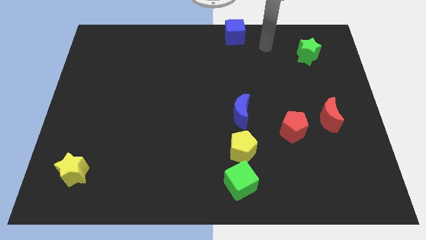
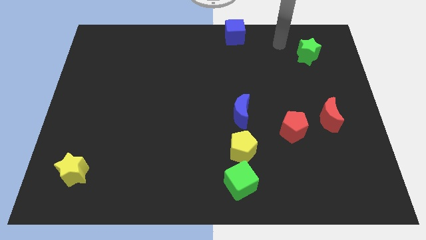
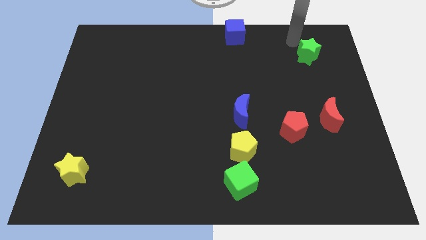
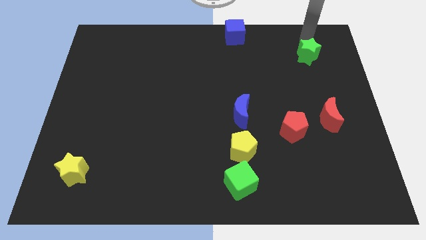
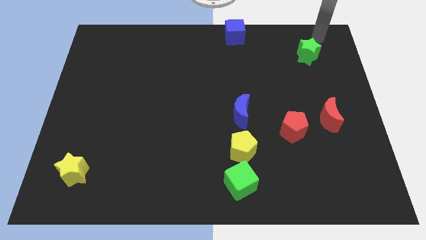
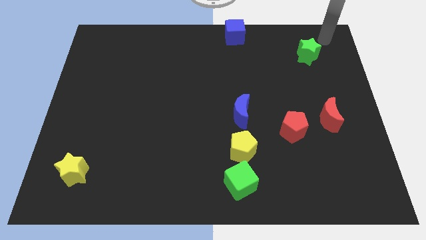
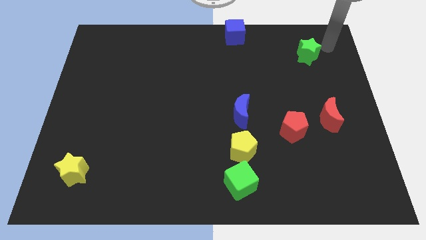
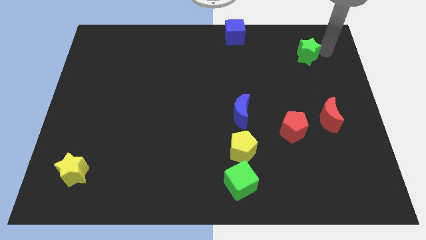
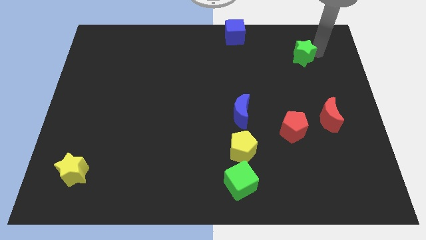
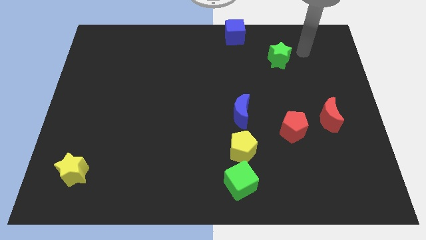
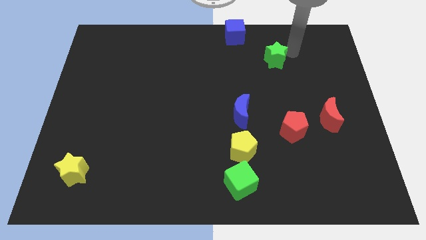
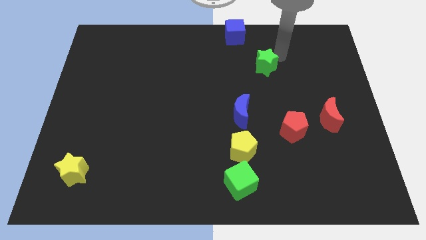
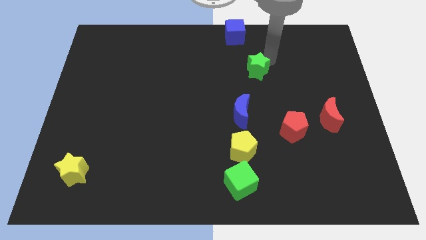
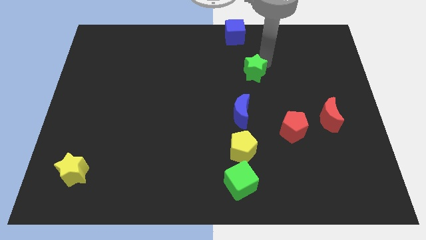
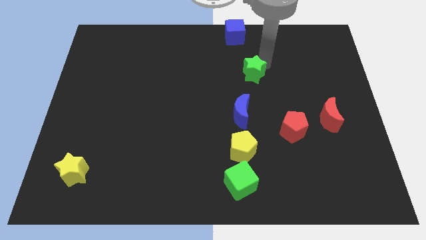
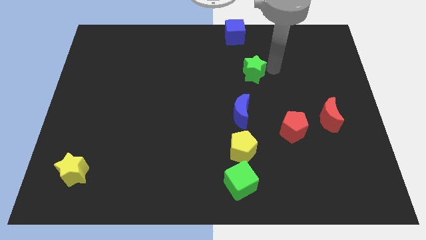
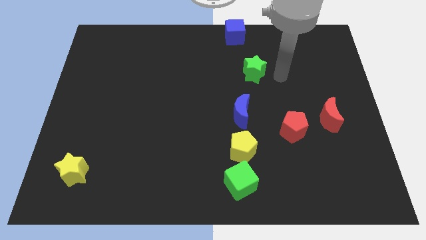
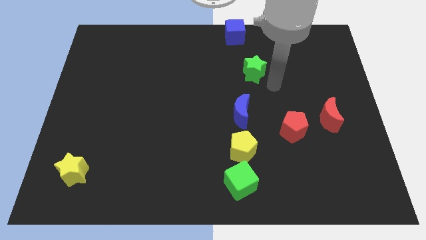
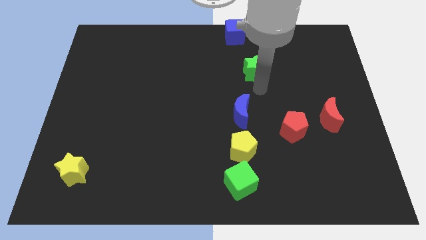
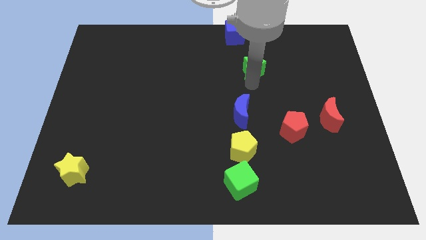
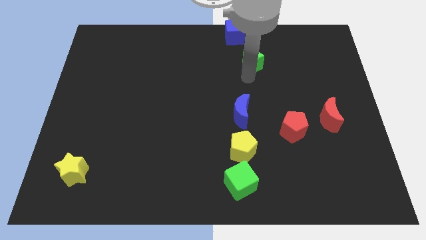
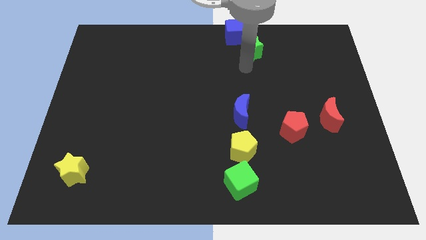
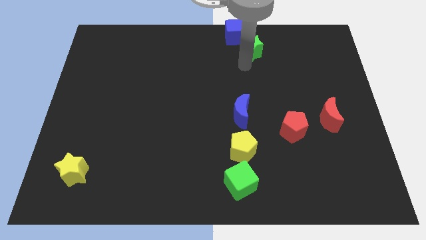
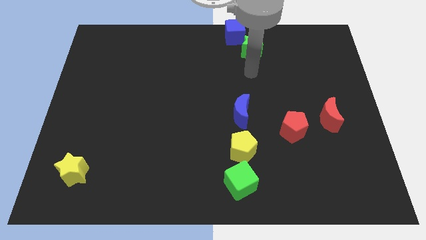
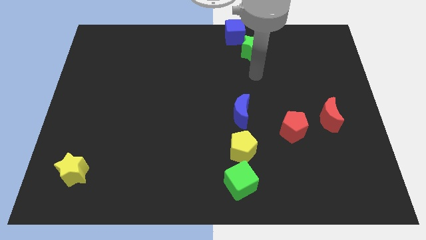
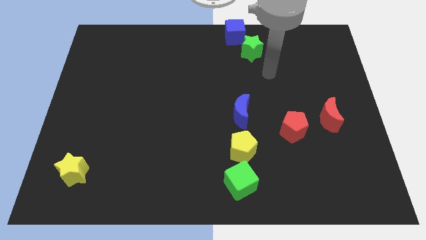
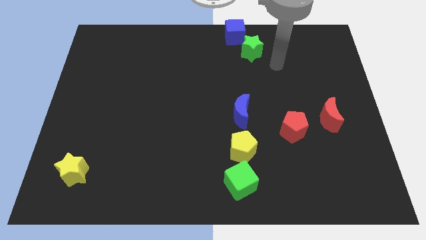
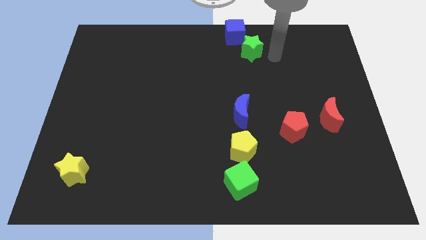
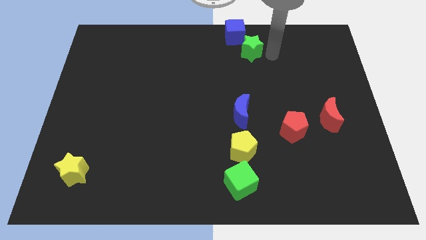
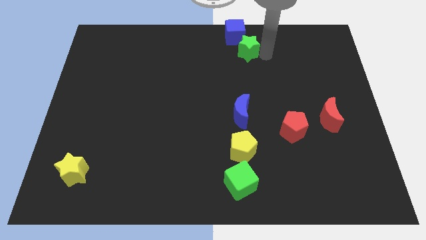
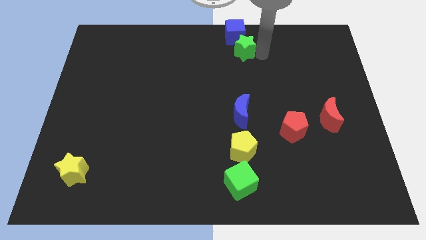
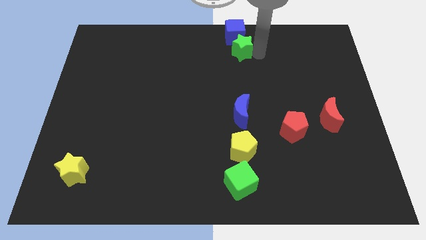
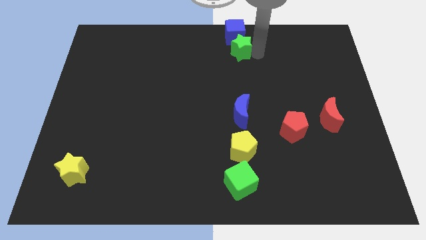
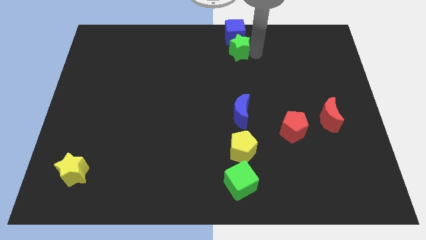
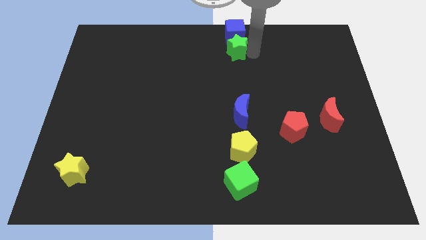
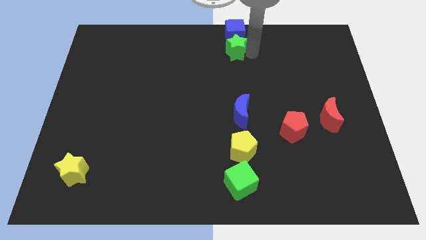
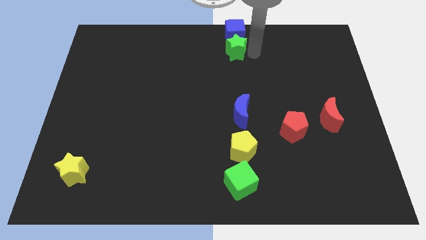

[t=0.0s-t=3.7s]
slide the green star to the bottom of the blue cube

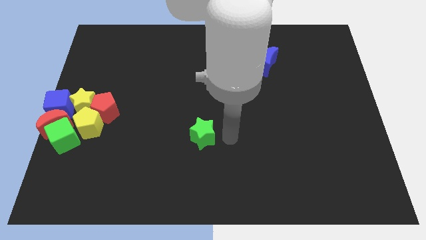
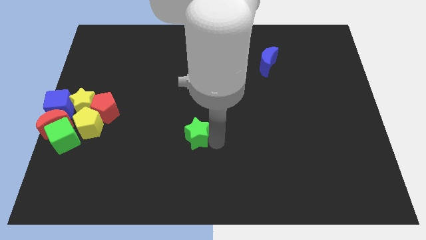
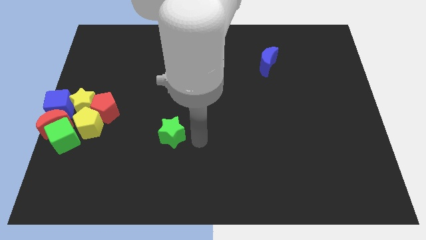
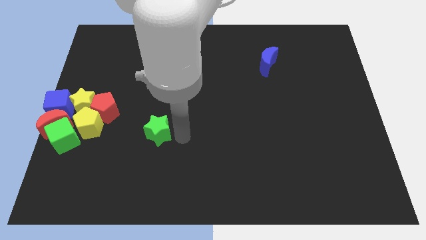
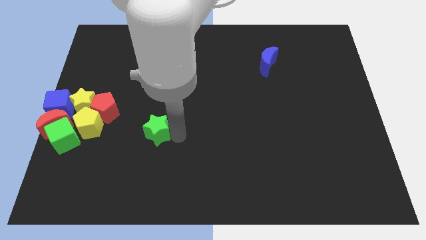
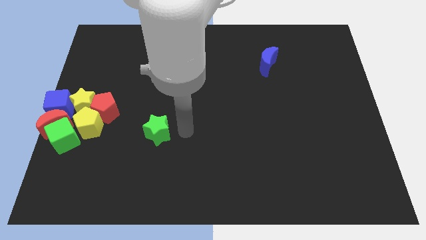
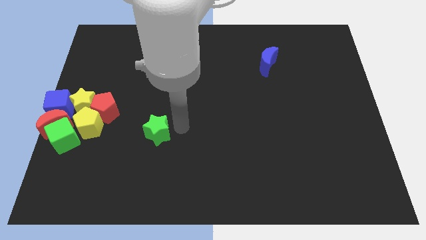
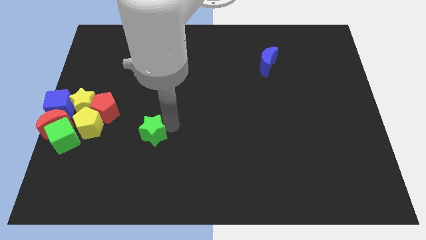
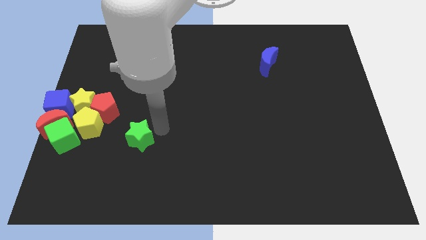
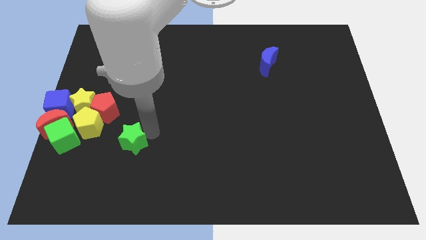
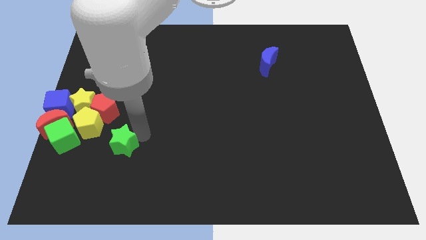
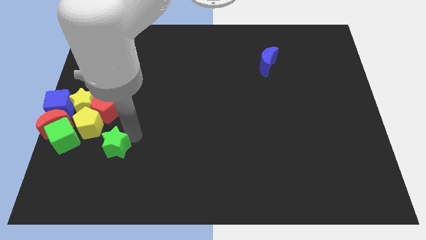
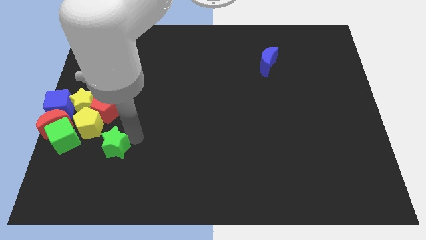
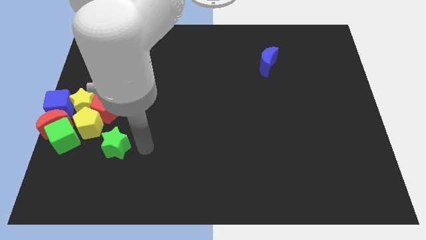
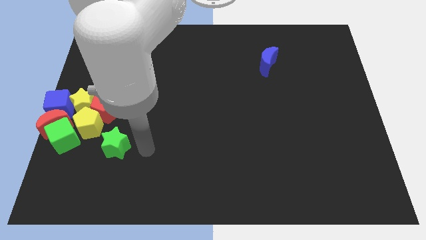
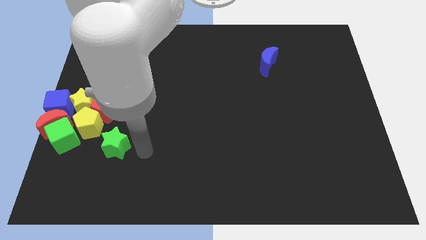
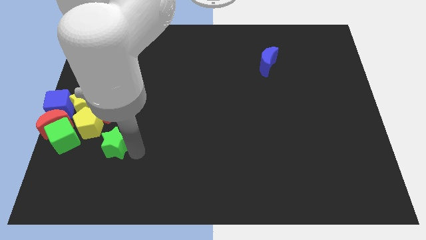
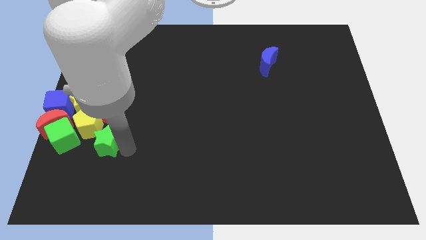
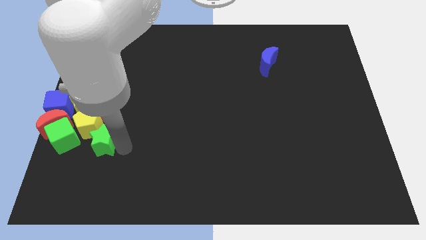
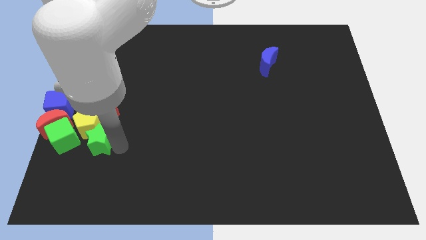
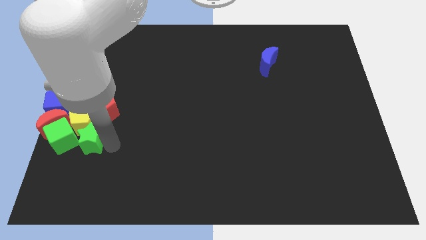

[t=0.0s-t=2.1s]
move the green star into the bottom of the yellow pentagon

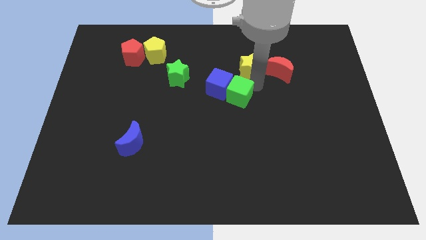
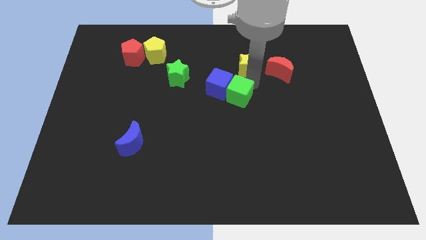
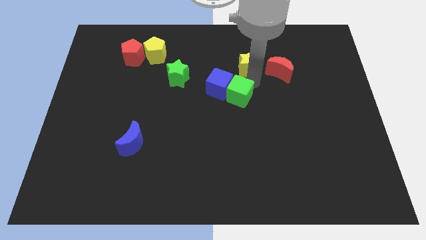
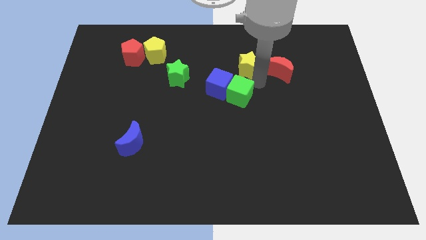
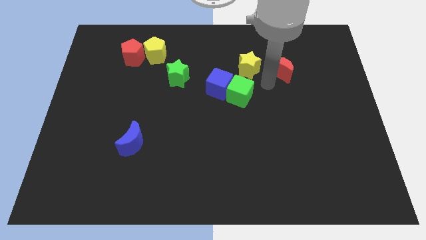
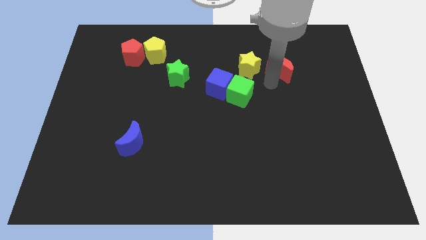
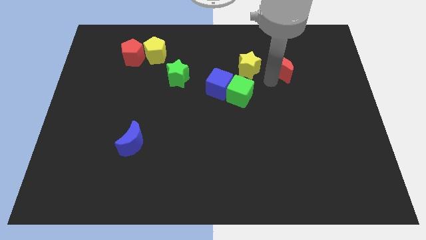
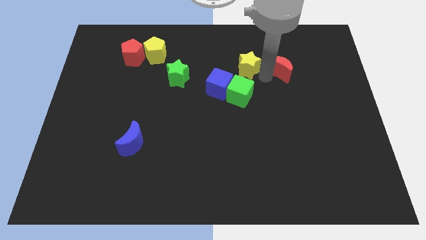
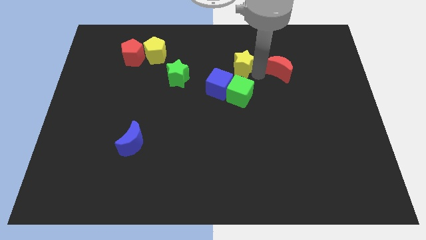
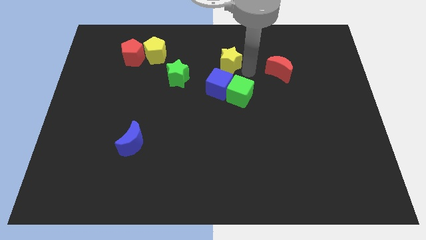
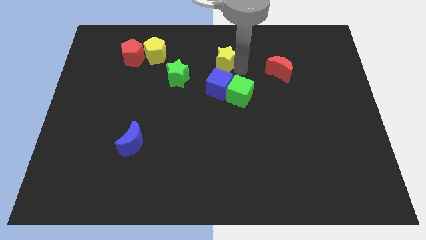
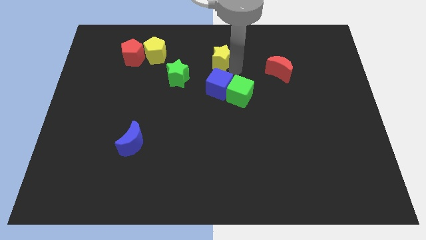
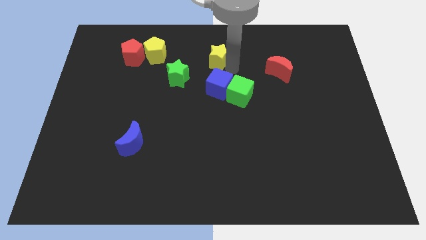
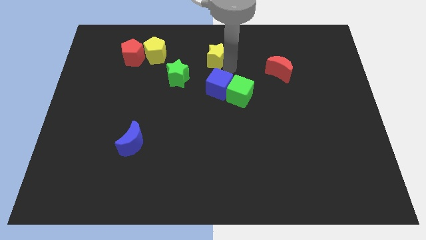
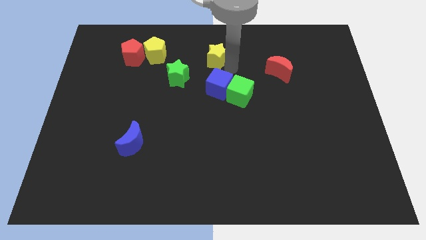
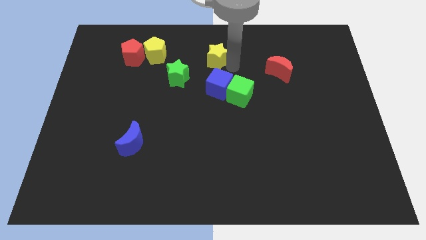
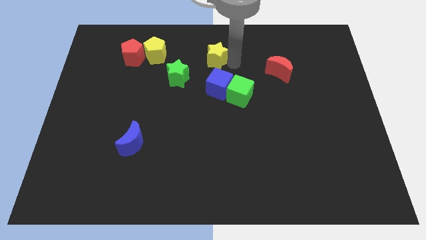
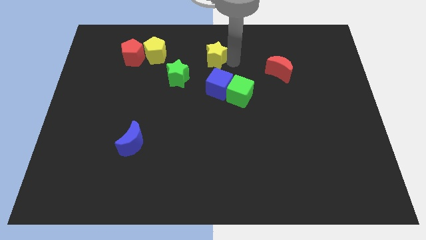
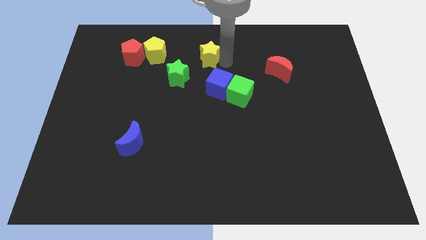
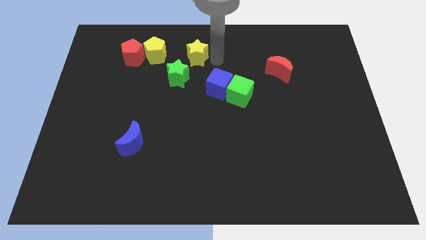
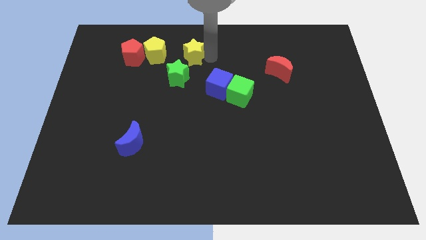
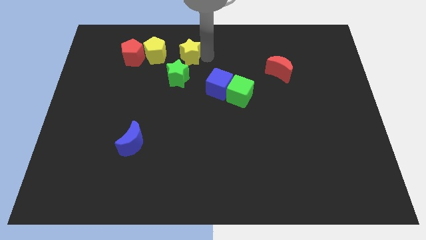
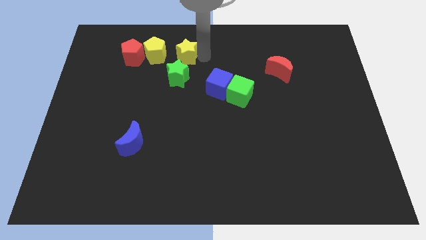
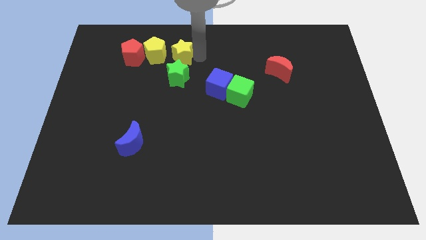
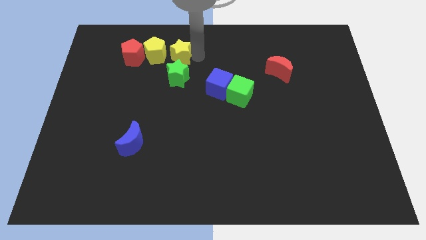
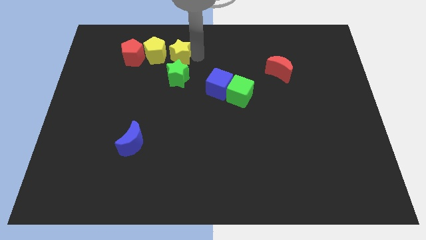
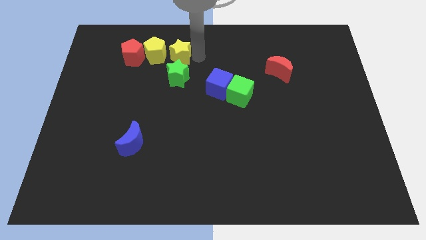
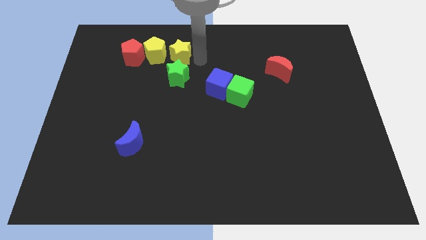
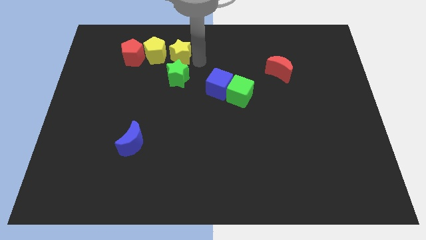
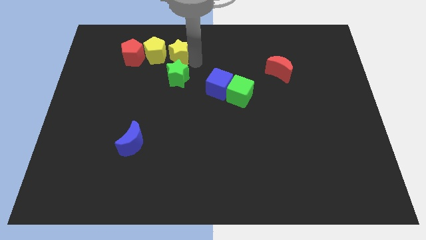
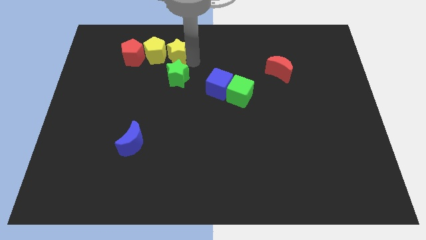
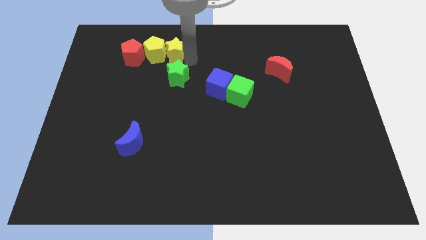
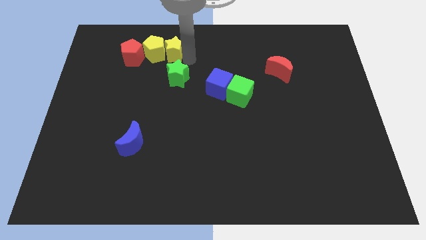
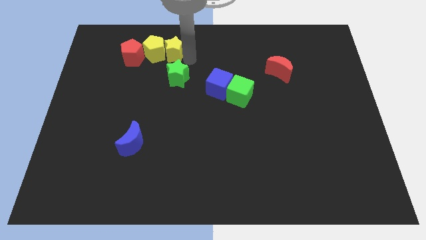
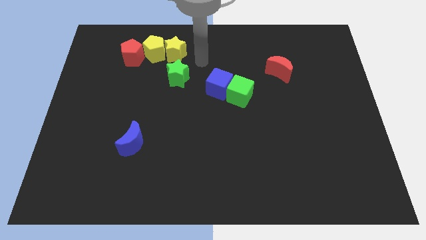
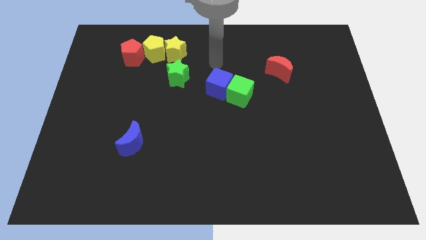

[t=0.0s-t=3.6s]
place the yellow star to the right of yellow pentagon
